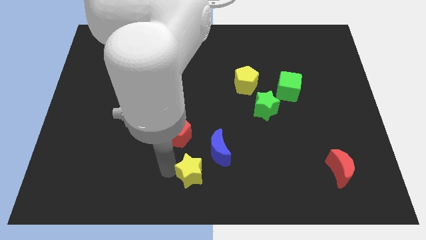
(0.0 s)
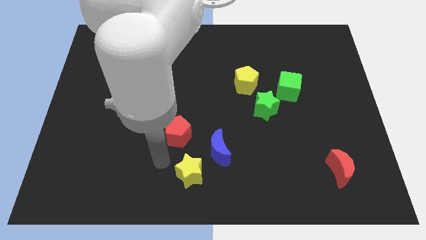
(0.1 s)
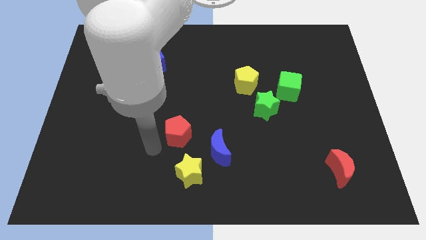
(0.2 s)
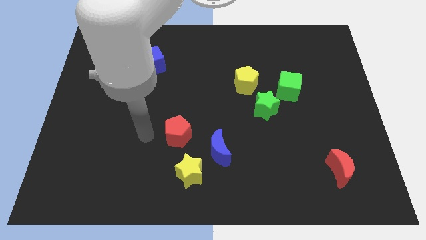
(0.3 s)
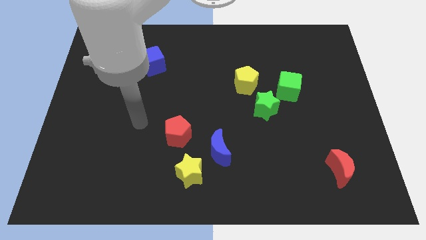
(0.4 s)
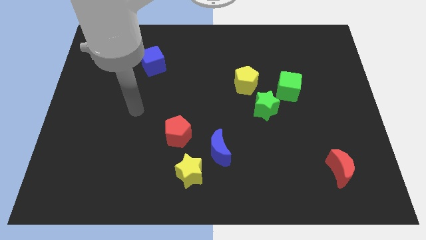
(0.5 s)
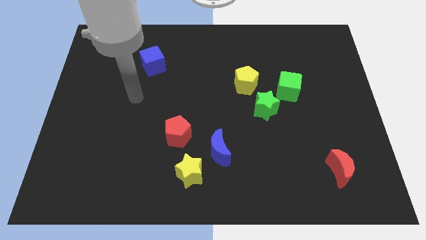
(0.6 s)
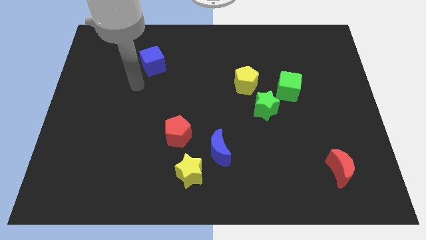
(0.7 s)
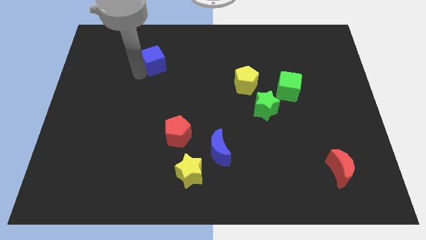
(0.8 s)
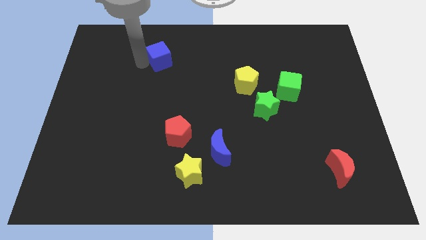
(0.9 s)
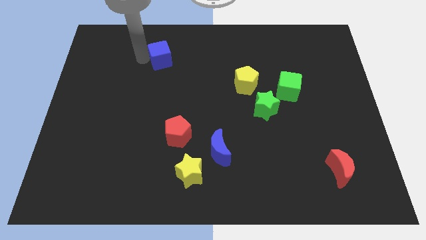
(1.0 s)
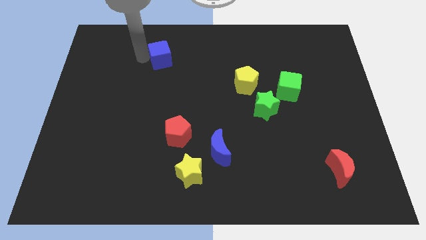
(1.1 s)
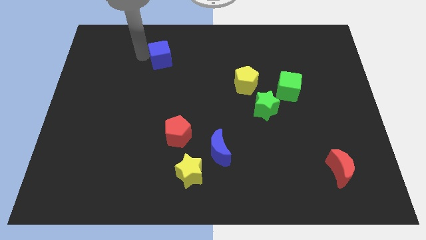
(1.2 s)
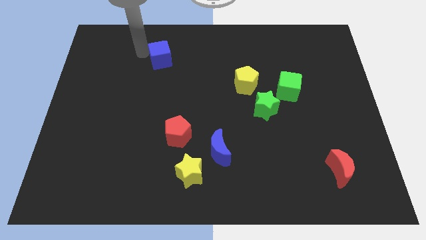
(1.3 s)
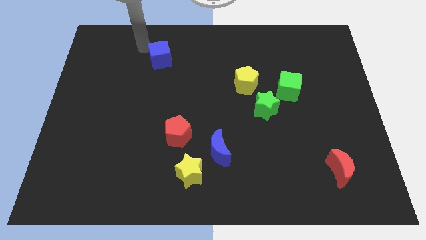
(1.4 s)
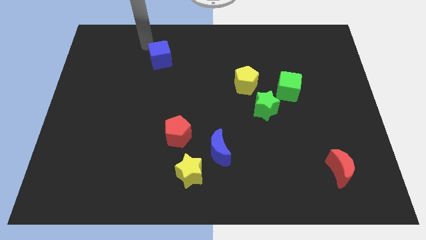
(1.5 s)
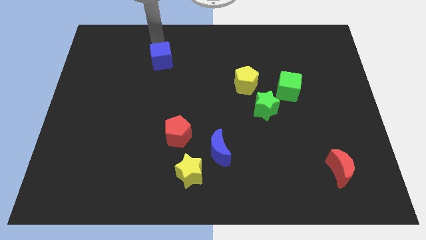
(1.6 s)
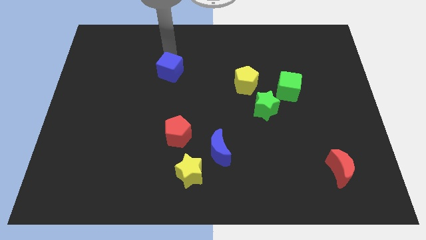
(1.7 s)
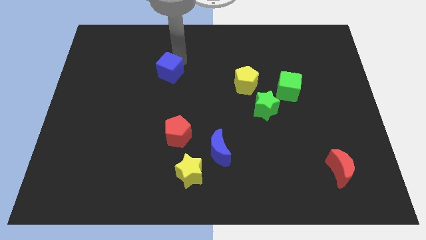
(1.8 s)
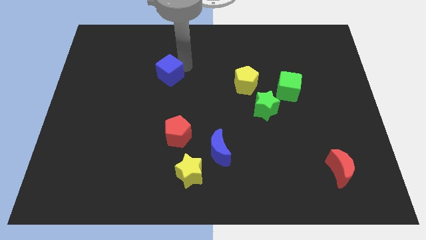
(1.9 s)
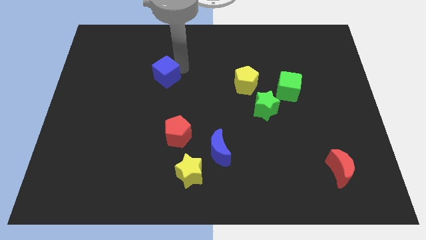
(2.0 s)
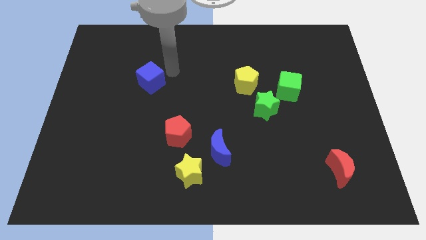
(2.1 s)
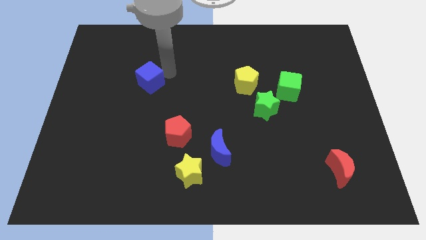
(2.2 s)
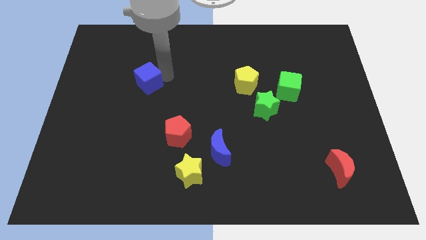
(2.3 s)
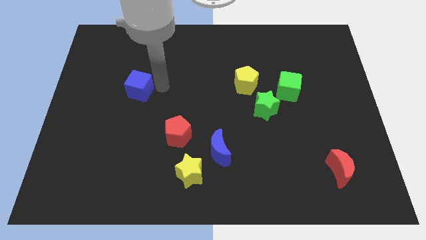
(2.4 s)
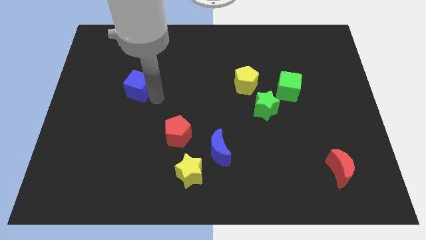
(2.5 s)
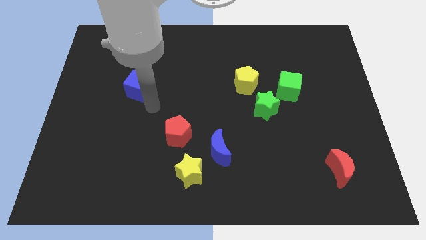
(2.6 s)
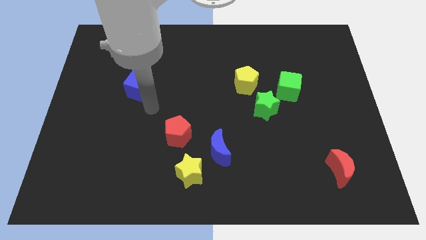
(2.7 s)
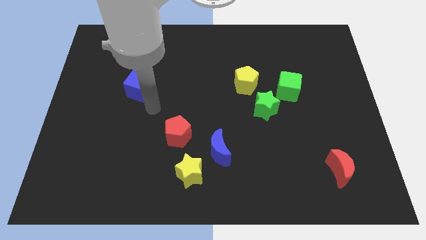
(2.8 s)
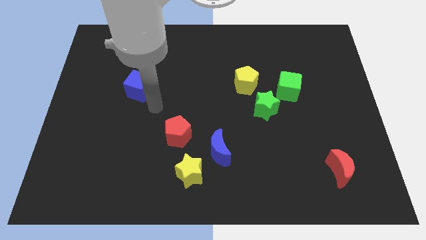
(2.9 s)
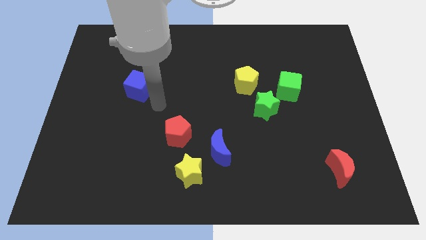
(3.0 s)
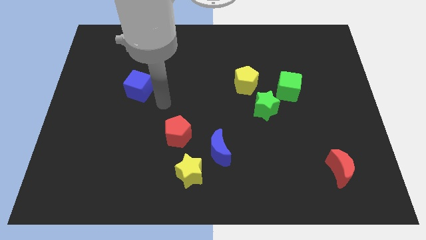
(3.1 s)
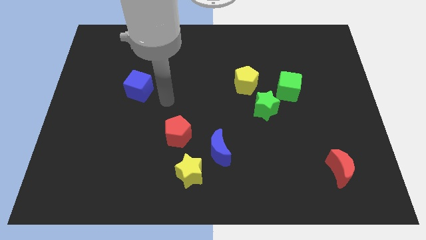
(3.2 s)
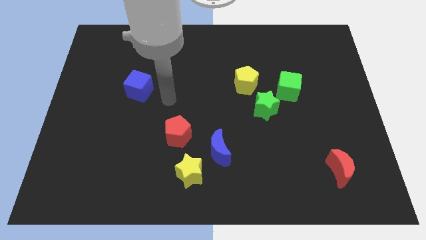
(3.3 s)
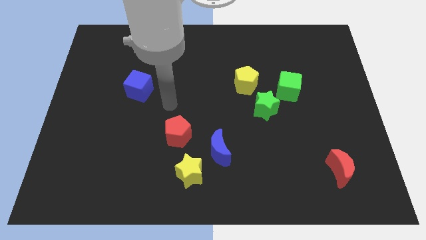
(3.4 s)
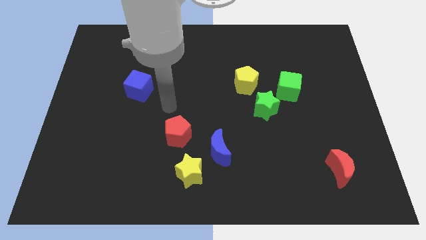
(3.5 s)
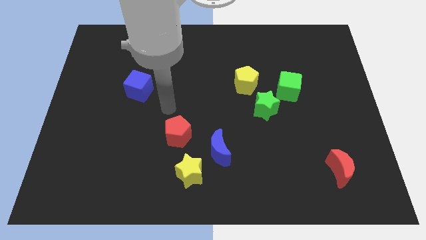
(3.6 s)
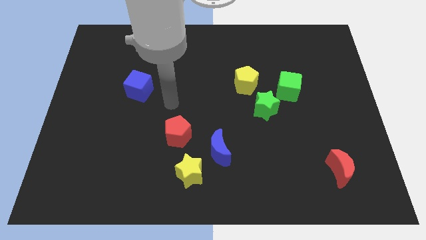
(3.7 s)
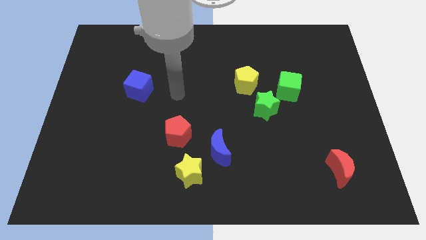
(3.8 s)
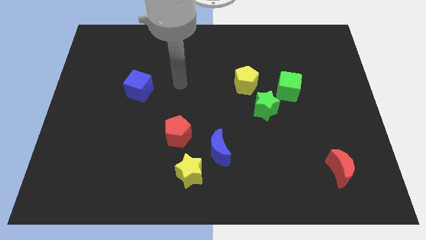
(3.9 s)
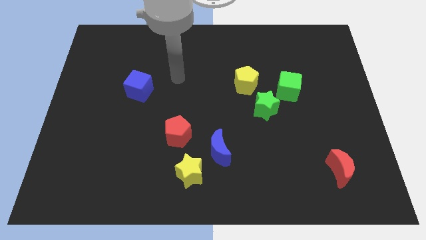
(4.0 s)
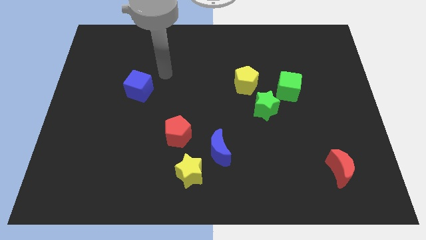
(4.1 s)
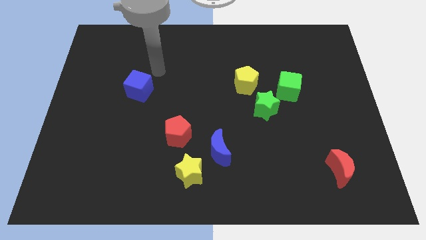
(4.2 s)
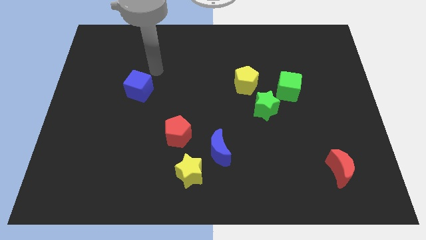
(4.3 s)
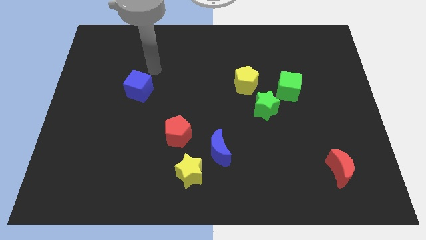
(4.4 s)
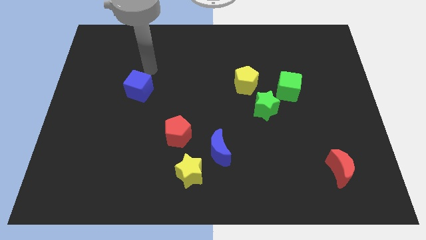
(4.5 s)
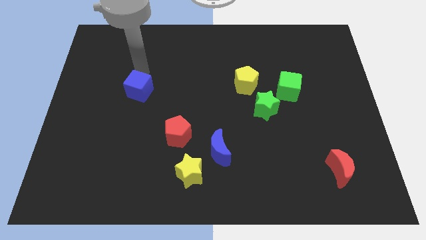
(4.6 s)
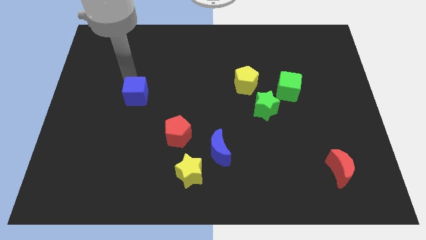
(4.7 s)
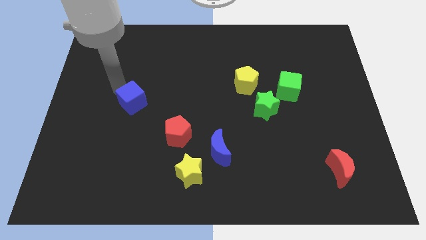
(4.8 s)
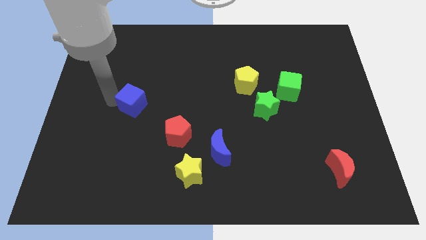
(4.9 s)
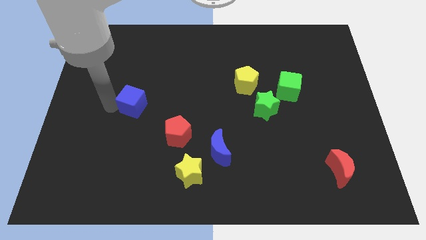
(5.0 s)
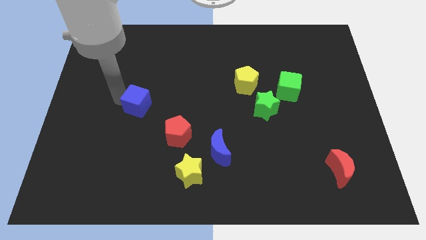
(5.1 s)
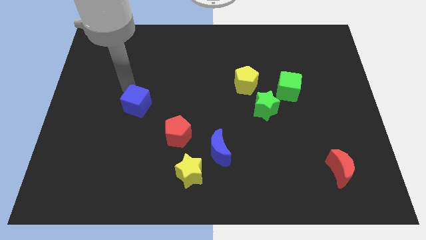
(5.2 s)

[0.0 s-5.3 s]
place the blue cube diagonally to red pentagon

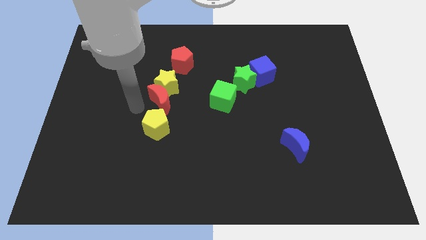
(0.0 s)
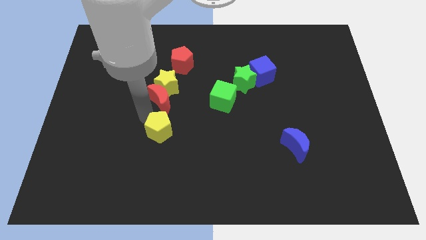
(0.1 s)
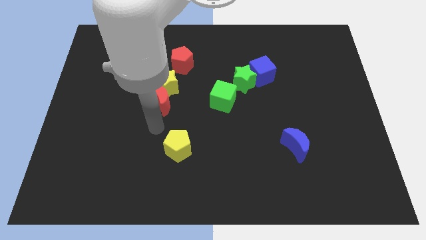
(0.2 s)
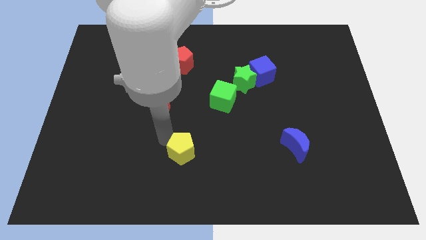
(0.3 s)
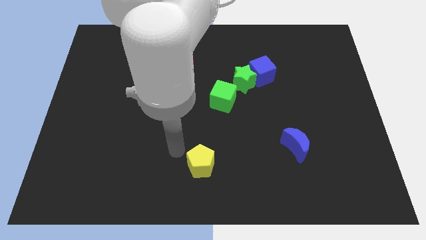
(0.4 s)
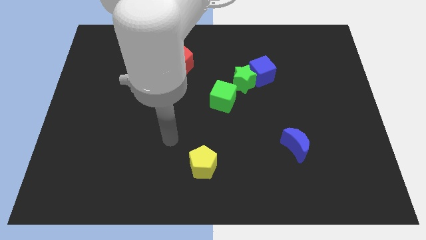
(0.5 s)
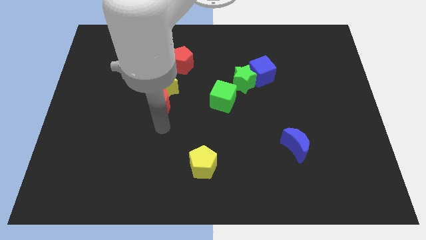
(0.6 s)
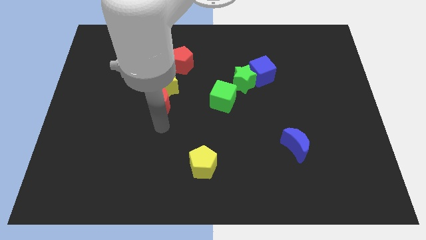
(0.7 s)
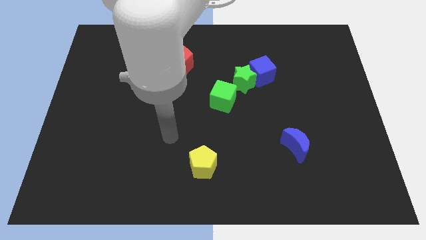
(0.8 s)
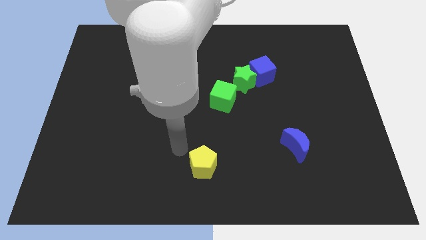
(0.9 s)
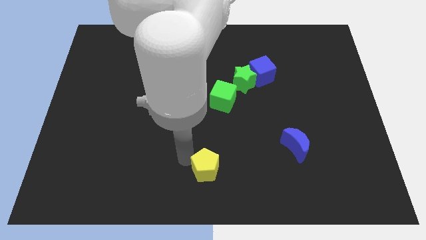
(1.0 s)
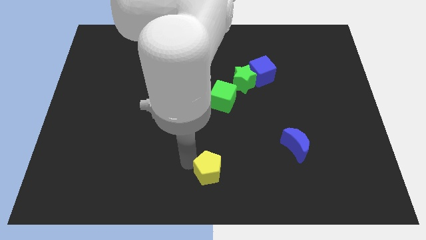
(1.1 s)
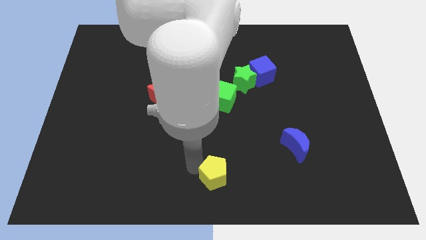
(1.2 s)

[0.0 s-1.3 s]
place the yellow pentagon vertically below the green cube

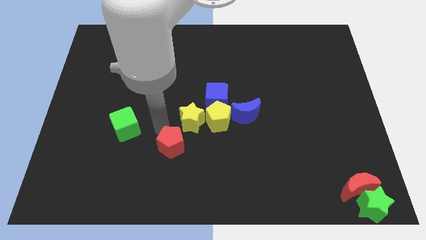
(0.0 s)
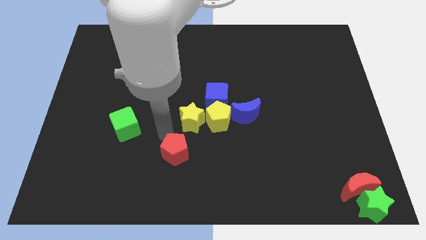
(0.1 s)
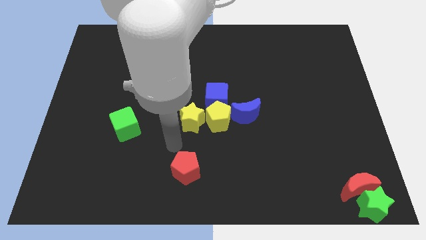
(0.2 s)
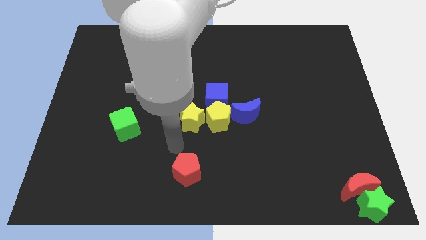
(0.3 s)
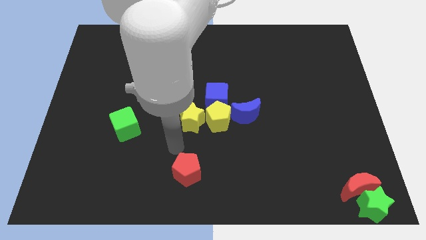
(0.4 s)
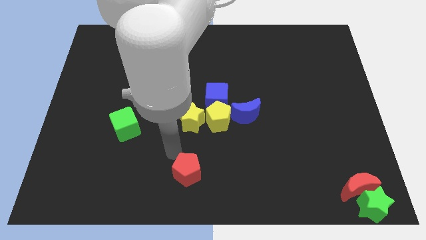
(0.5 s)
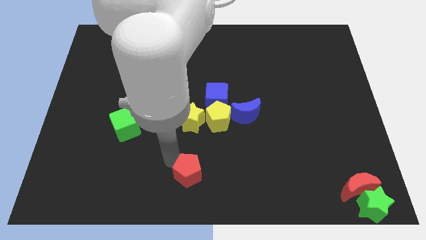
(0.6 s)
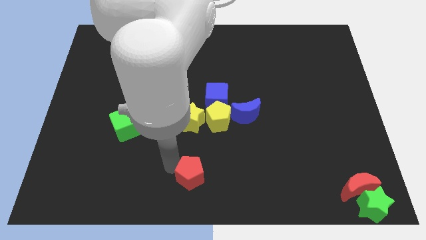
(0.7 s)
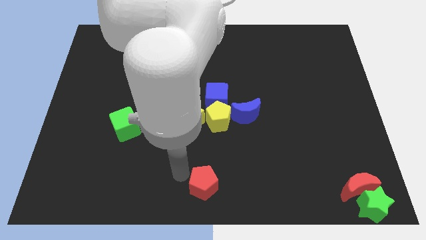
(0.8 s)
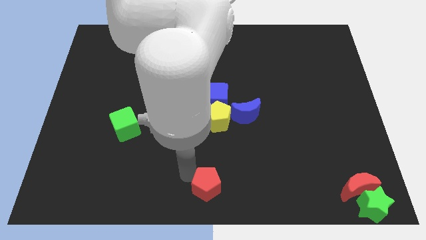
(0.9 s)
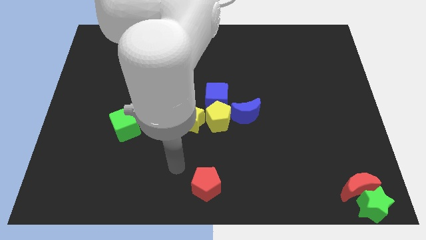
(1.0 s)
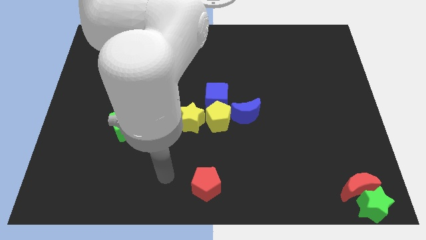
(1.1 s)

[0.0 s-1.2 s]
move the red pentagon at the bottom center of the board

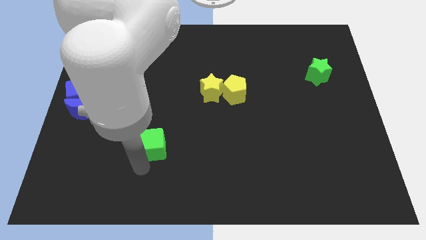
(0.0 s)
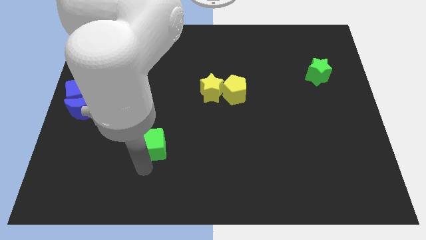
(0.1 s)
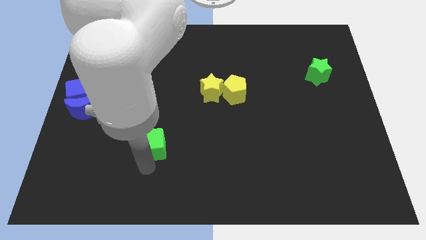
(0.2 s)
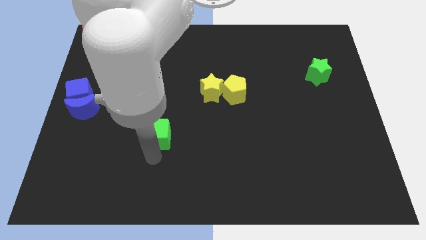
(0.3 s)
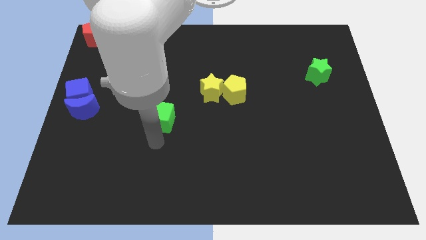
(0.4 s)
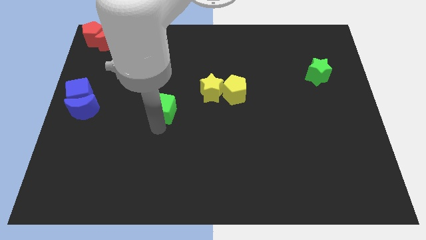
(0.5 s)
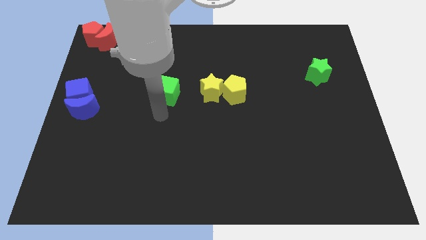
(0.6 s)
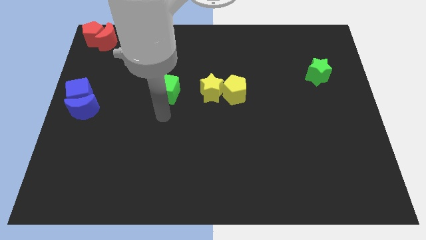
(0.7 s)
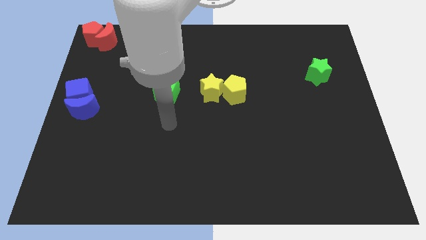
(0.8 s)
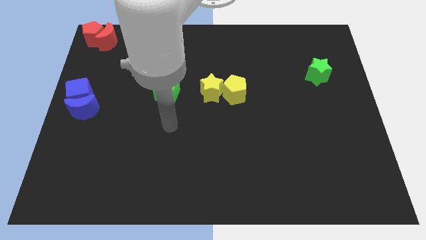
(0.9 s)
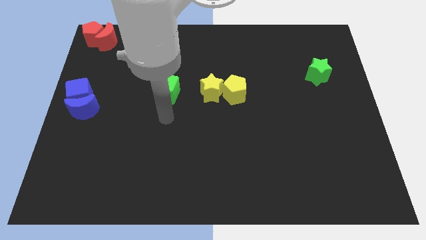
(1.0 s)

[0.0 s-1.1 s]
move the green cube to the left of the yellow star

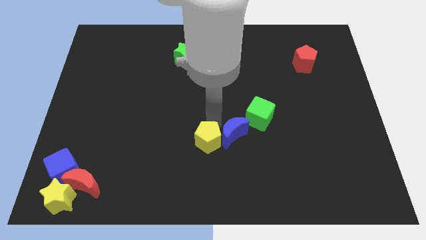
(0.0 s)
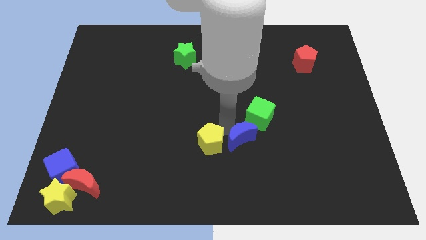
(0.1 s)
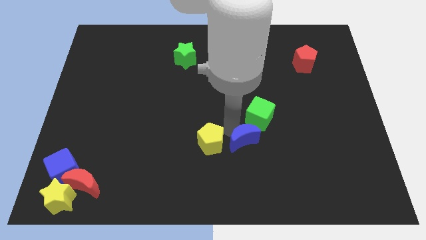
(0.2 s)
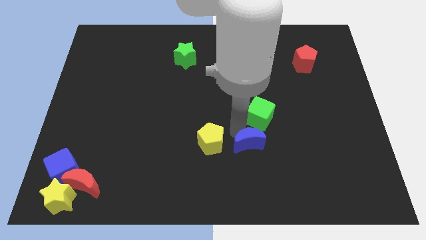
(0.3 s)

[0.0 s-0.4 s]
push the yellow pentagon into blue crescent
